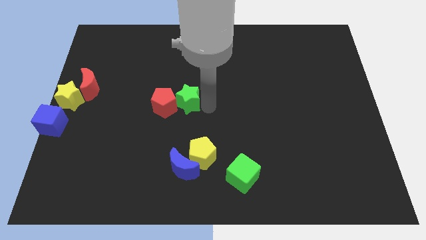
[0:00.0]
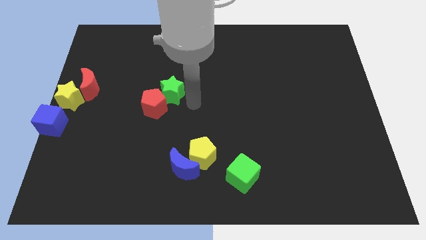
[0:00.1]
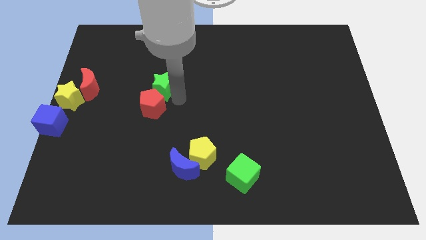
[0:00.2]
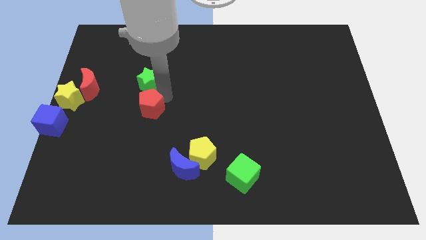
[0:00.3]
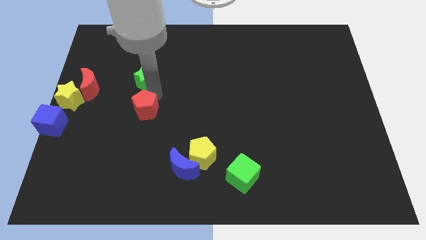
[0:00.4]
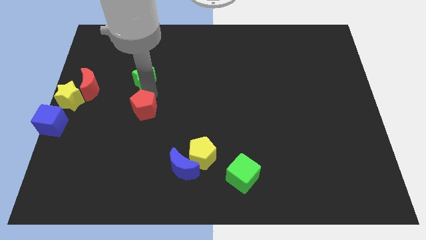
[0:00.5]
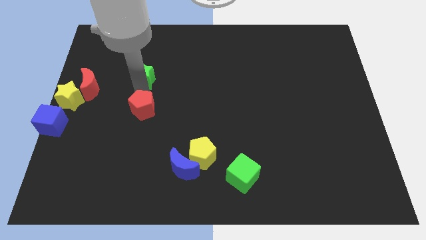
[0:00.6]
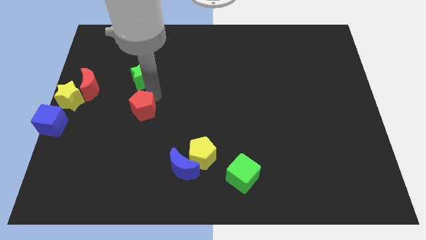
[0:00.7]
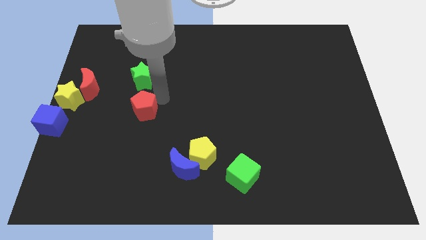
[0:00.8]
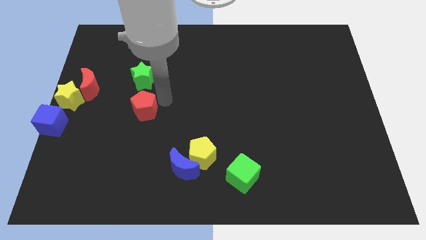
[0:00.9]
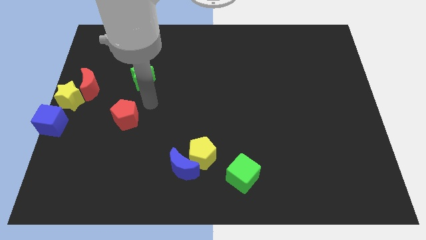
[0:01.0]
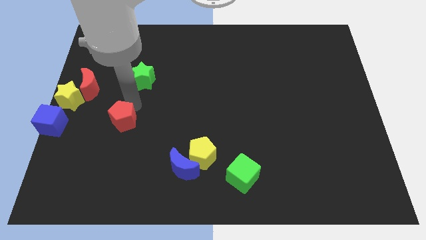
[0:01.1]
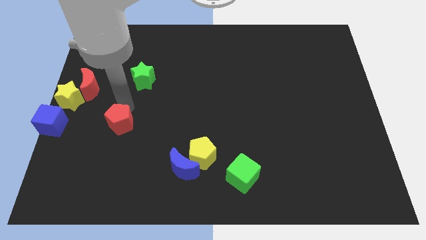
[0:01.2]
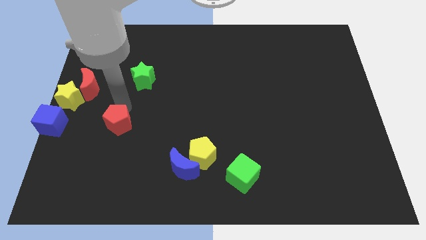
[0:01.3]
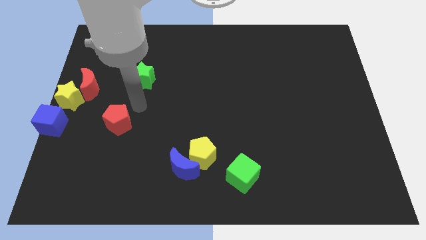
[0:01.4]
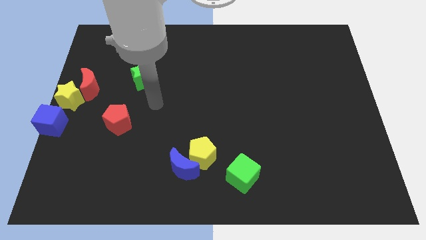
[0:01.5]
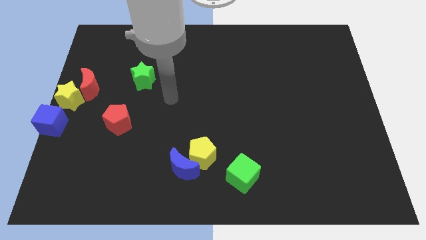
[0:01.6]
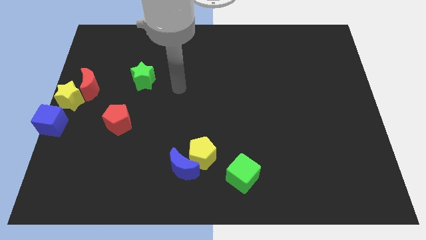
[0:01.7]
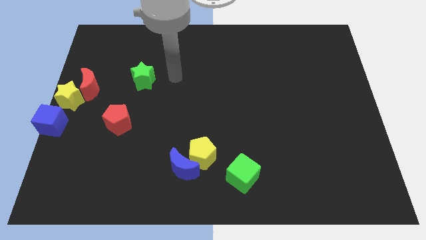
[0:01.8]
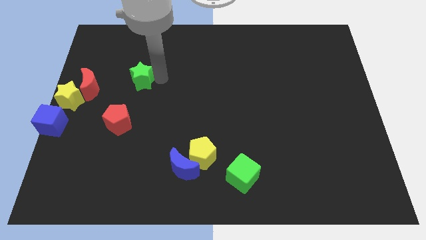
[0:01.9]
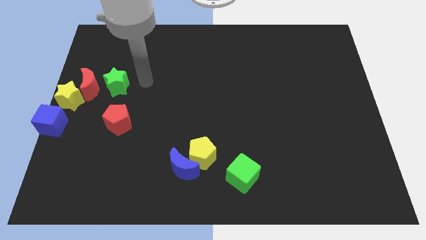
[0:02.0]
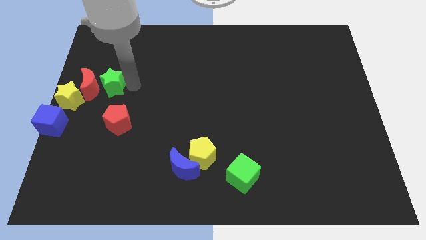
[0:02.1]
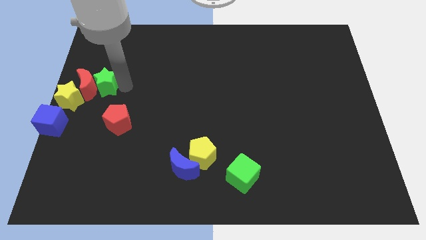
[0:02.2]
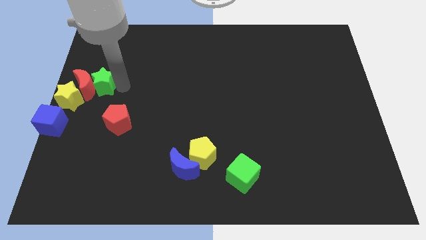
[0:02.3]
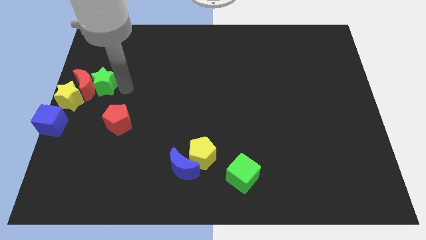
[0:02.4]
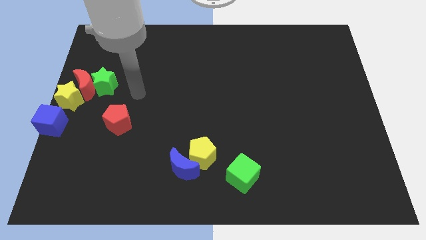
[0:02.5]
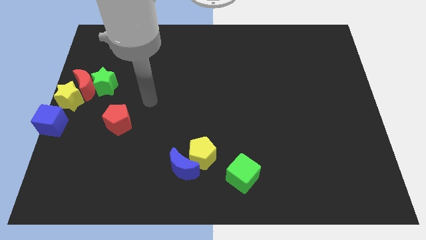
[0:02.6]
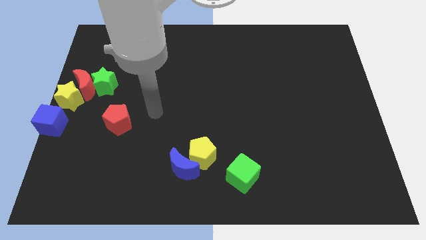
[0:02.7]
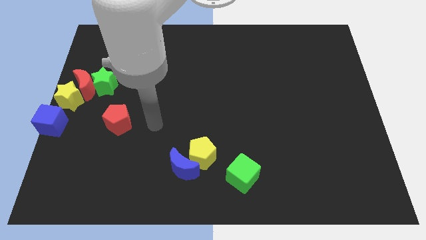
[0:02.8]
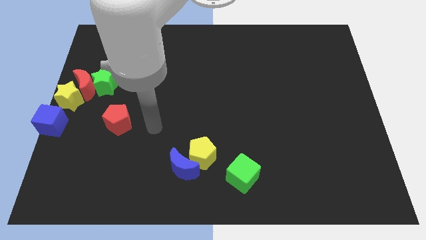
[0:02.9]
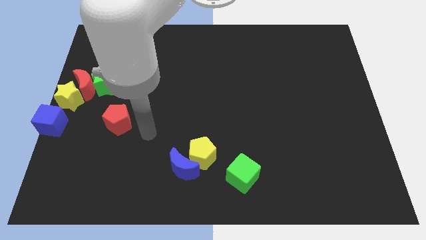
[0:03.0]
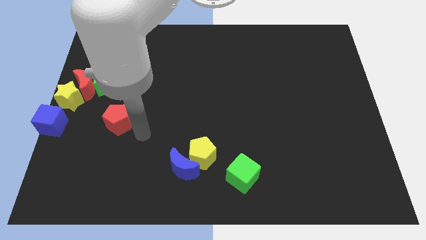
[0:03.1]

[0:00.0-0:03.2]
move the green star into the right side of the red moon

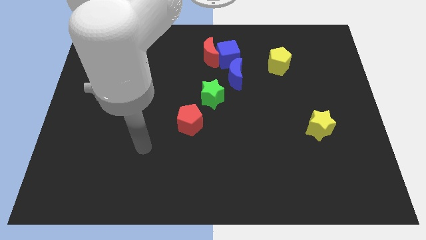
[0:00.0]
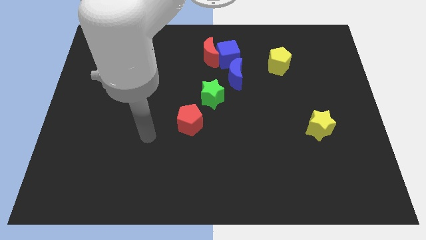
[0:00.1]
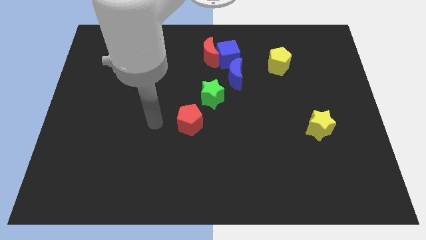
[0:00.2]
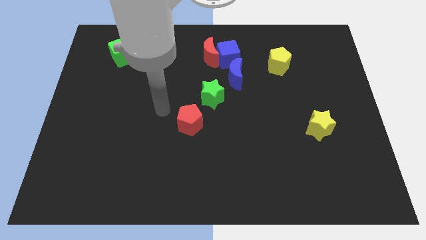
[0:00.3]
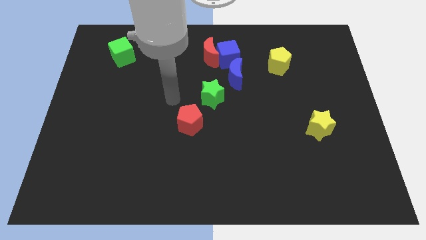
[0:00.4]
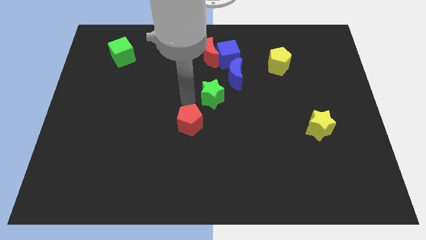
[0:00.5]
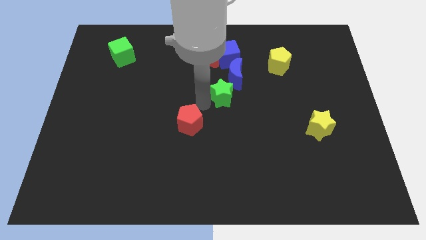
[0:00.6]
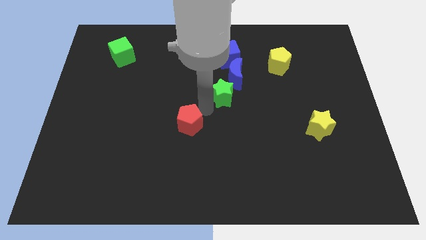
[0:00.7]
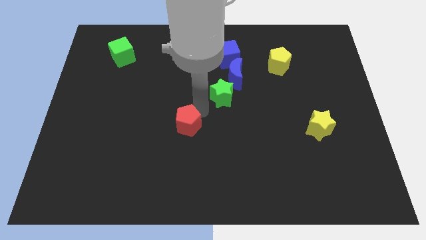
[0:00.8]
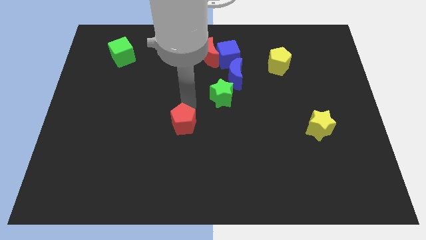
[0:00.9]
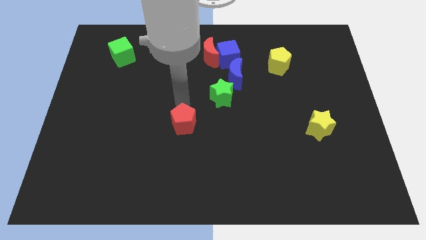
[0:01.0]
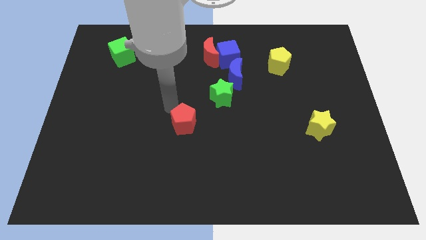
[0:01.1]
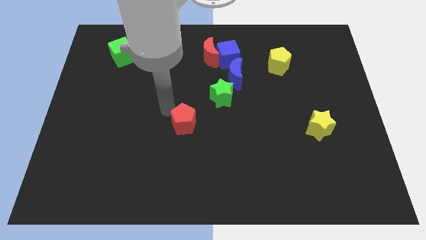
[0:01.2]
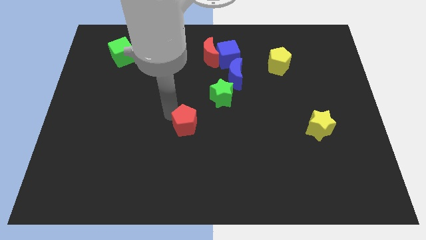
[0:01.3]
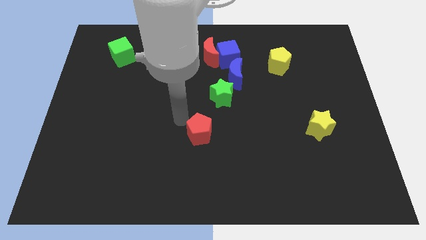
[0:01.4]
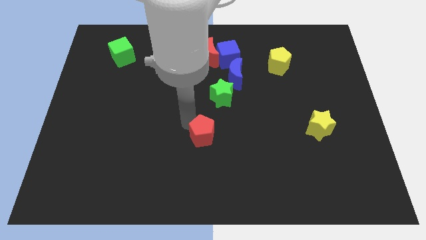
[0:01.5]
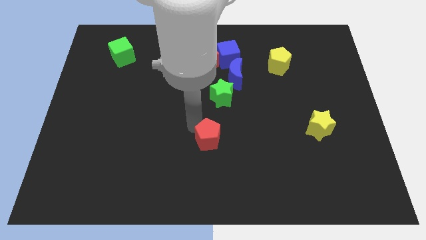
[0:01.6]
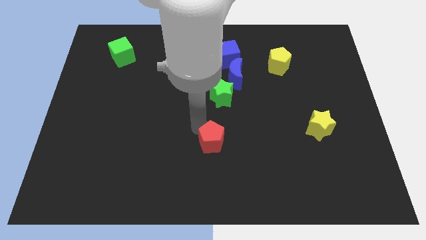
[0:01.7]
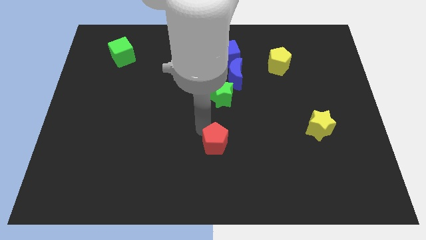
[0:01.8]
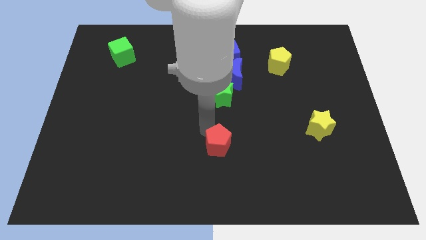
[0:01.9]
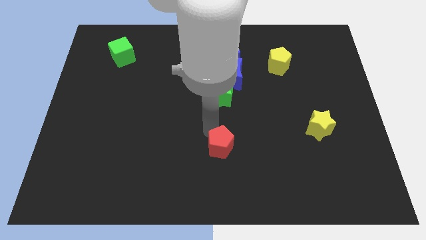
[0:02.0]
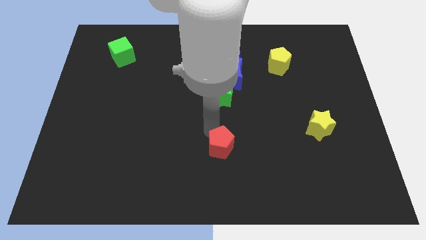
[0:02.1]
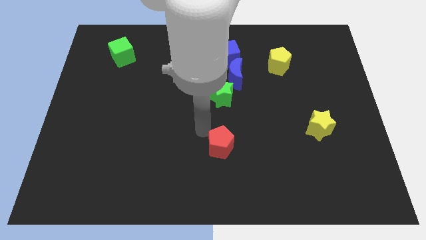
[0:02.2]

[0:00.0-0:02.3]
place the red pentagon vertically below the green star

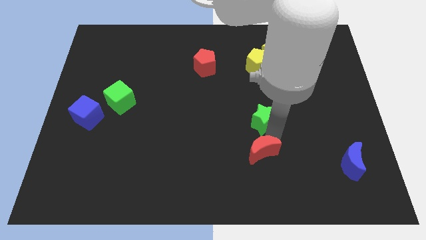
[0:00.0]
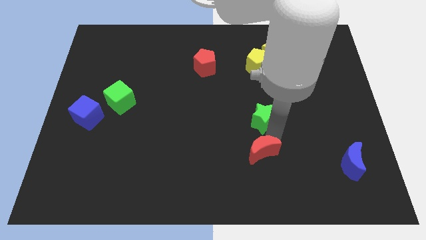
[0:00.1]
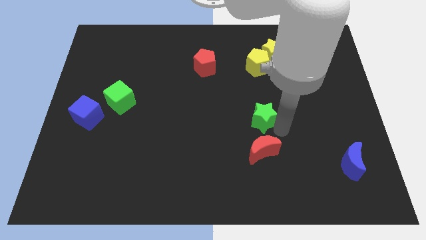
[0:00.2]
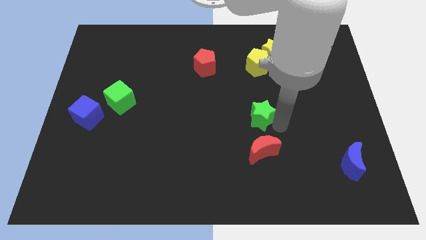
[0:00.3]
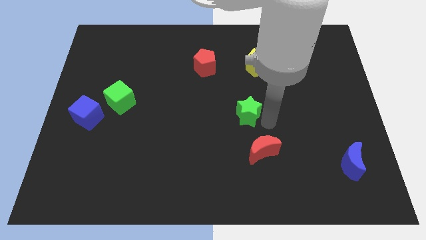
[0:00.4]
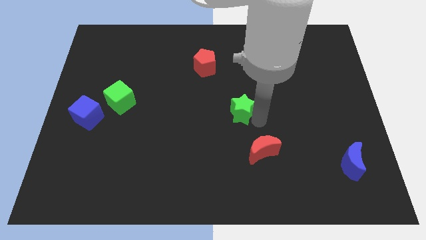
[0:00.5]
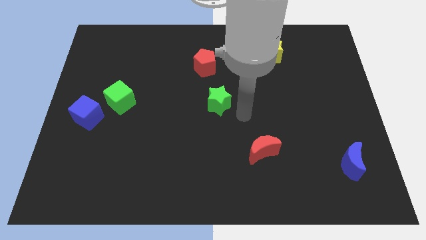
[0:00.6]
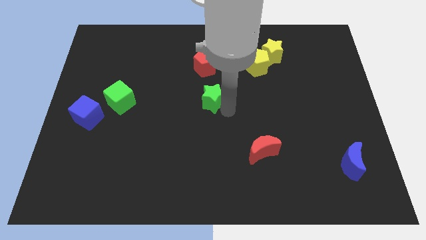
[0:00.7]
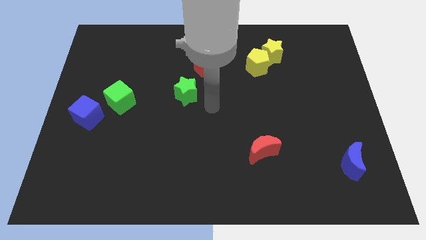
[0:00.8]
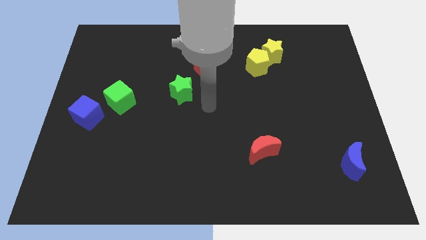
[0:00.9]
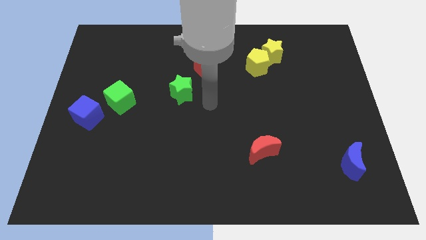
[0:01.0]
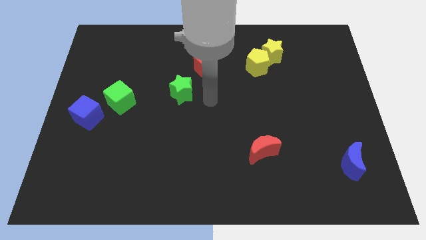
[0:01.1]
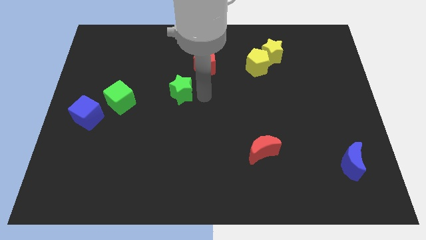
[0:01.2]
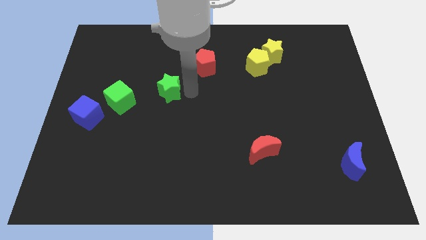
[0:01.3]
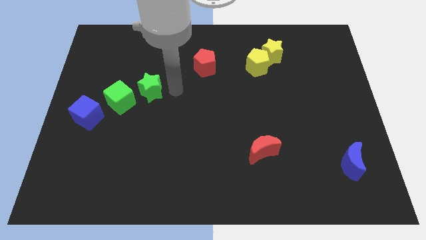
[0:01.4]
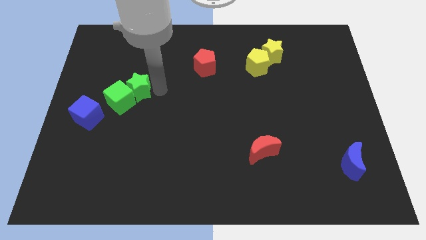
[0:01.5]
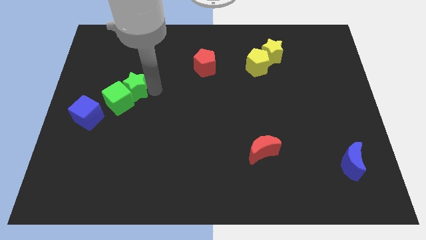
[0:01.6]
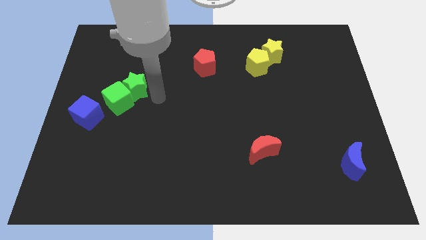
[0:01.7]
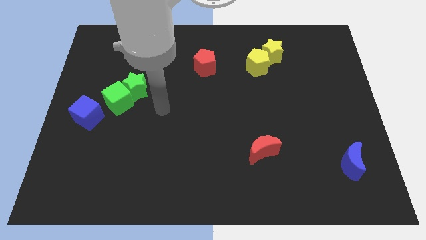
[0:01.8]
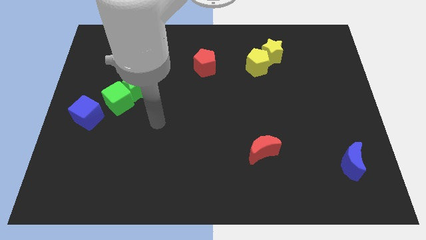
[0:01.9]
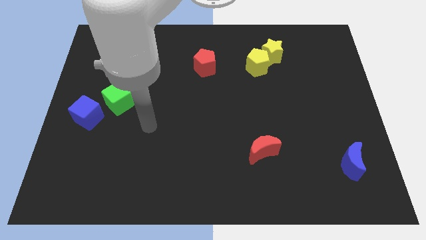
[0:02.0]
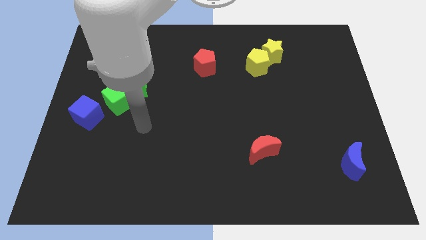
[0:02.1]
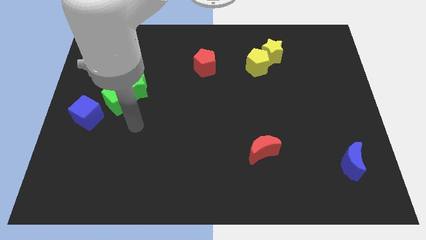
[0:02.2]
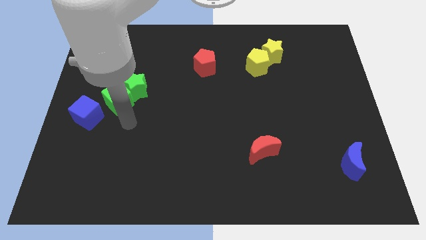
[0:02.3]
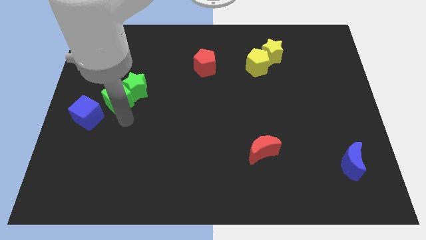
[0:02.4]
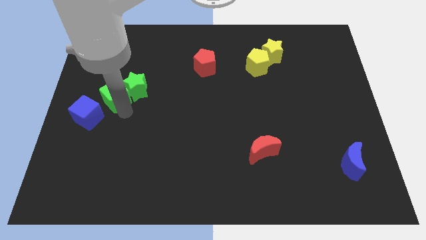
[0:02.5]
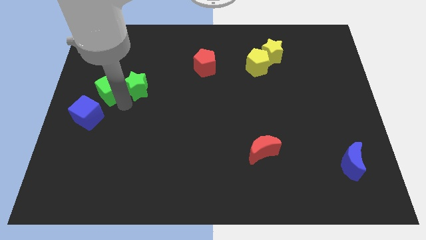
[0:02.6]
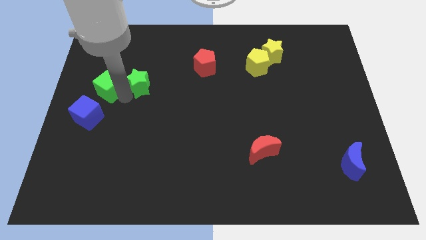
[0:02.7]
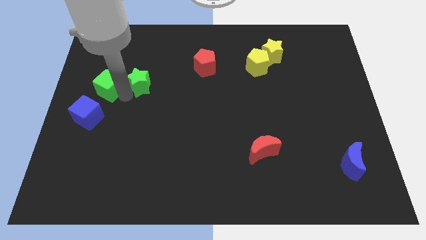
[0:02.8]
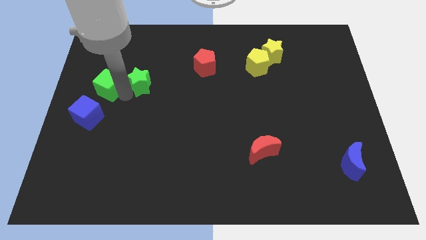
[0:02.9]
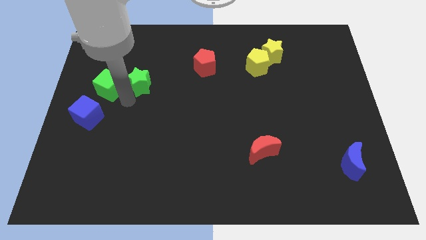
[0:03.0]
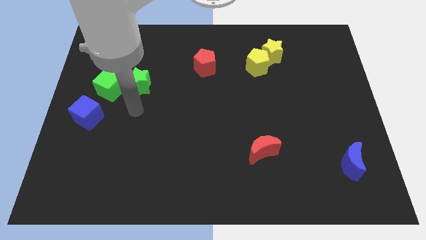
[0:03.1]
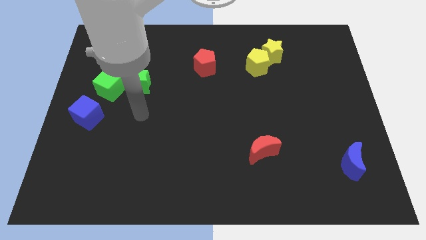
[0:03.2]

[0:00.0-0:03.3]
push the green star close to the green cube
